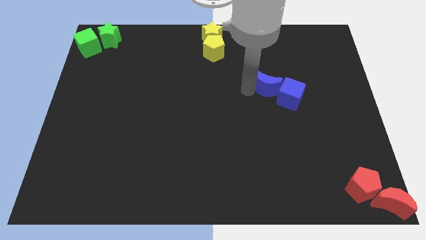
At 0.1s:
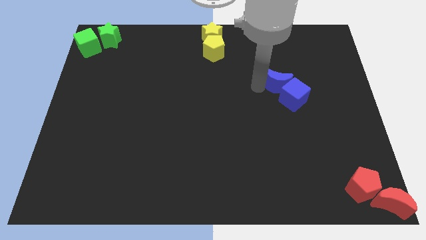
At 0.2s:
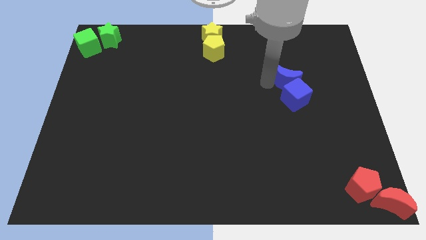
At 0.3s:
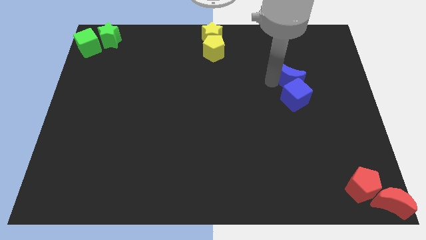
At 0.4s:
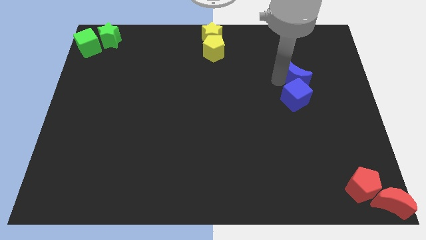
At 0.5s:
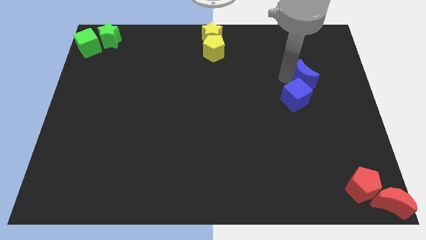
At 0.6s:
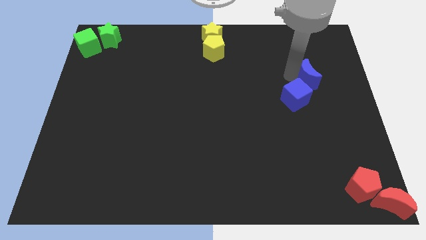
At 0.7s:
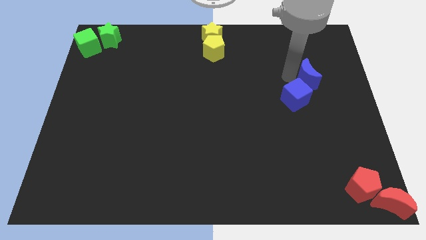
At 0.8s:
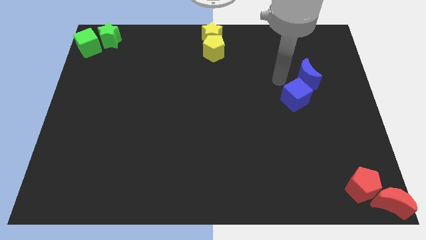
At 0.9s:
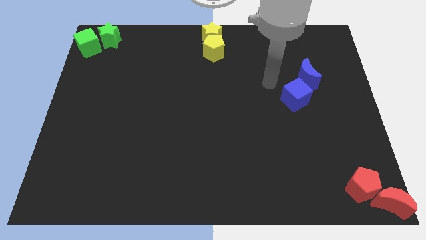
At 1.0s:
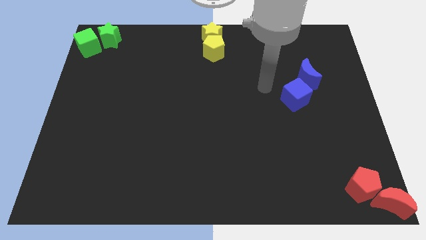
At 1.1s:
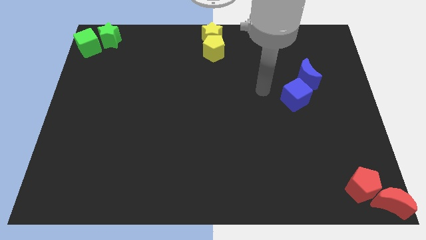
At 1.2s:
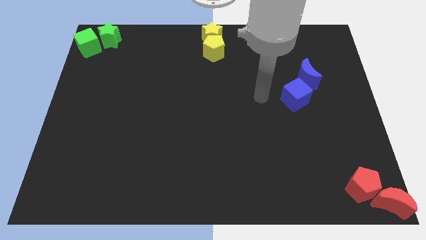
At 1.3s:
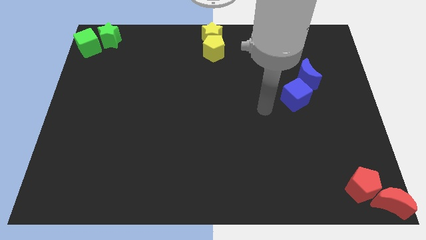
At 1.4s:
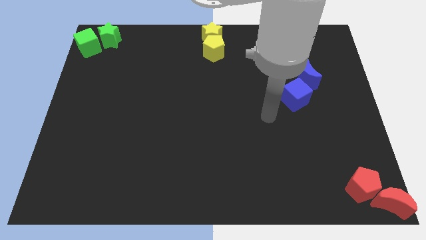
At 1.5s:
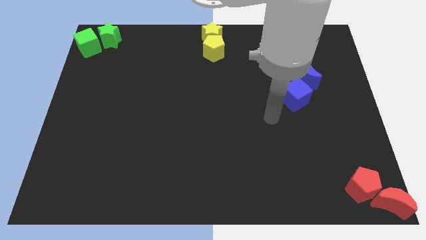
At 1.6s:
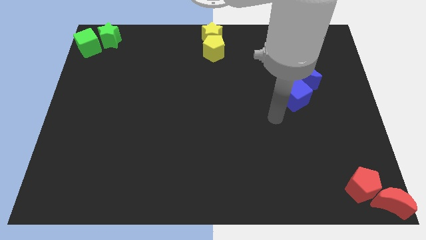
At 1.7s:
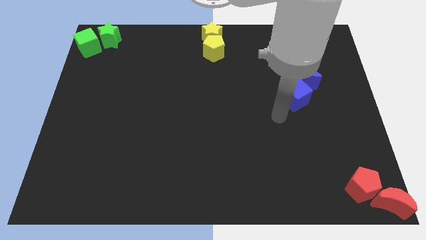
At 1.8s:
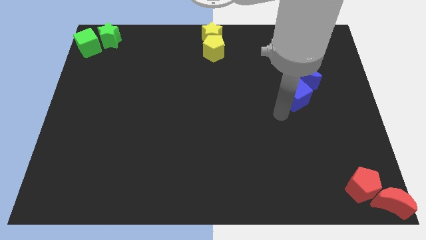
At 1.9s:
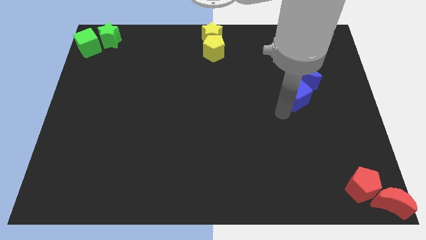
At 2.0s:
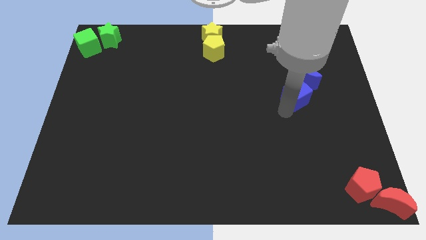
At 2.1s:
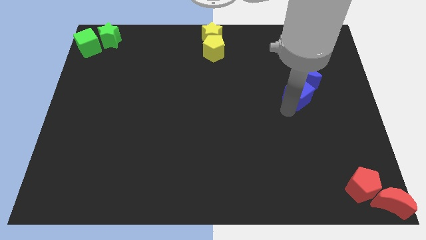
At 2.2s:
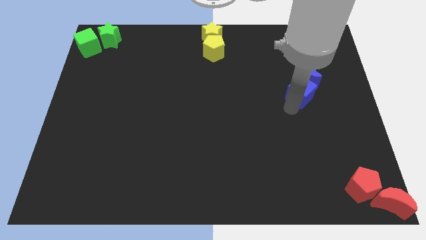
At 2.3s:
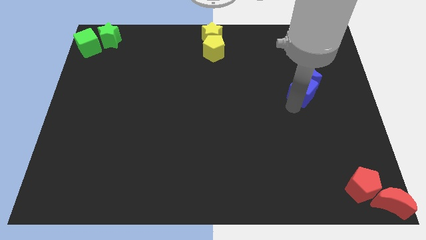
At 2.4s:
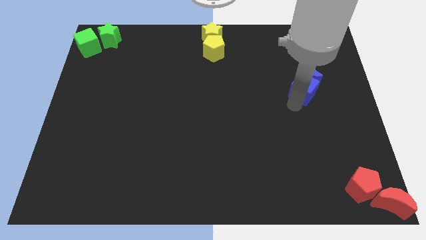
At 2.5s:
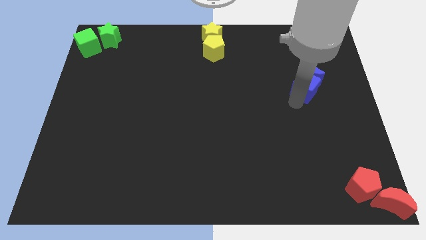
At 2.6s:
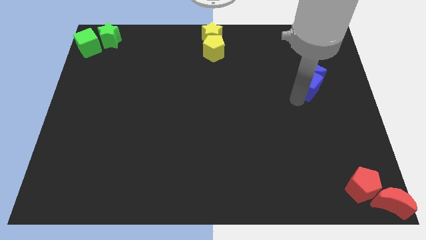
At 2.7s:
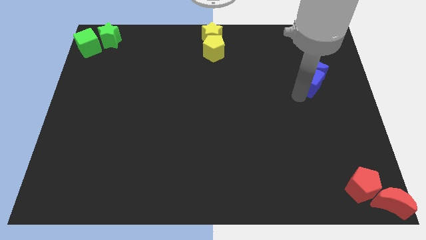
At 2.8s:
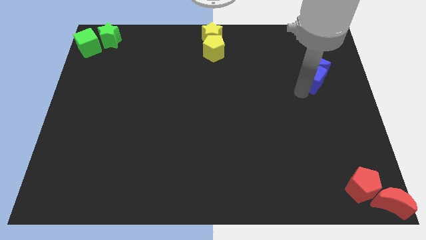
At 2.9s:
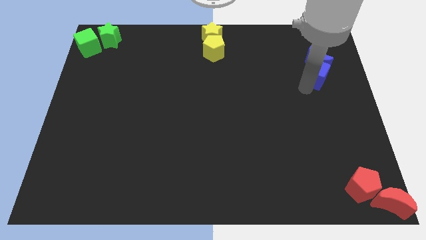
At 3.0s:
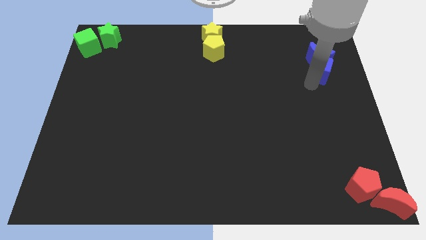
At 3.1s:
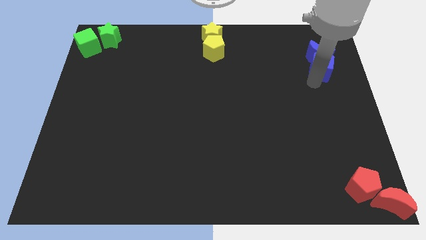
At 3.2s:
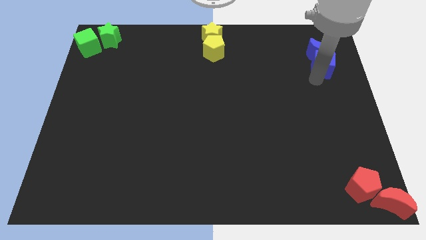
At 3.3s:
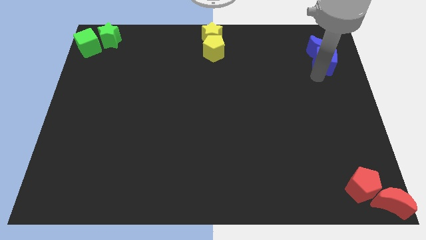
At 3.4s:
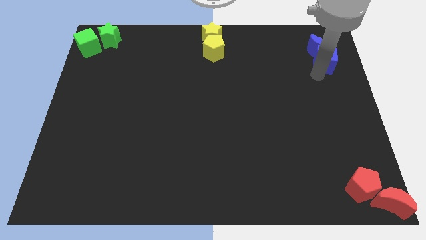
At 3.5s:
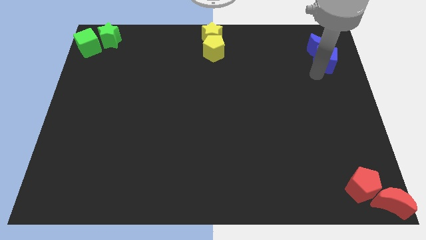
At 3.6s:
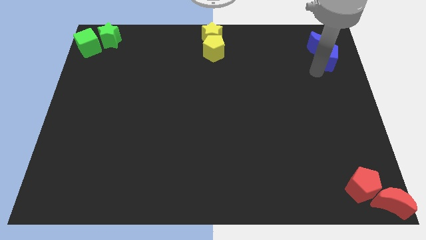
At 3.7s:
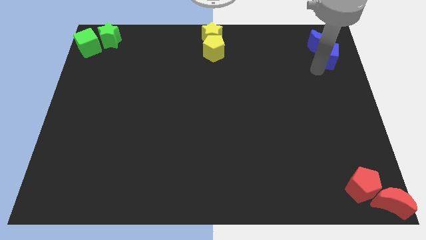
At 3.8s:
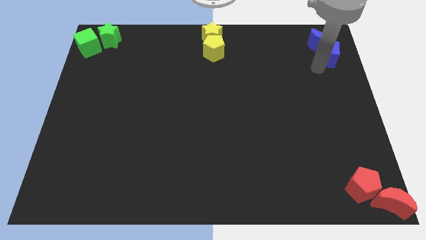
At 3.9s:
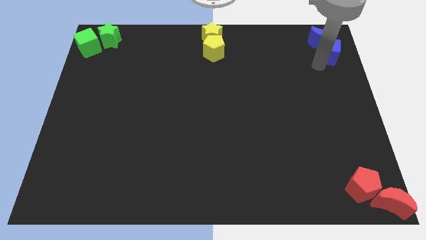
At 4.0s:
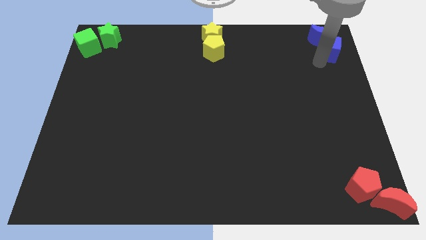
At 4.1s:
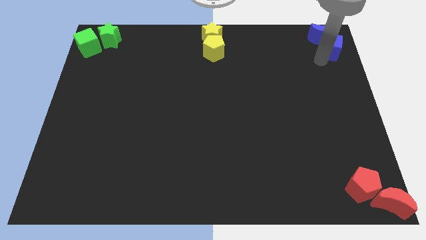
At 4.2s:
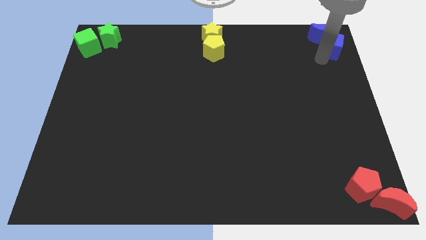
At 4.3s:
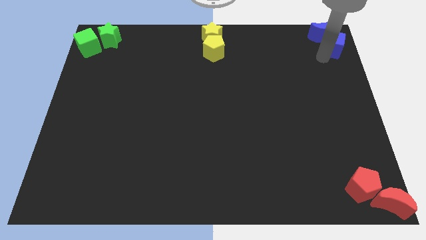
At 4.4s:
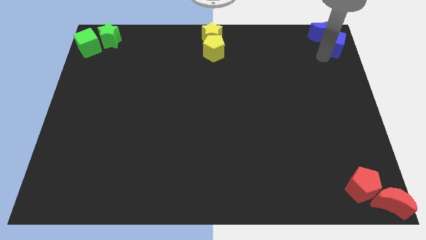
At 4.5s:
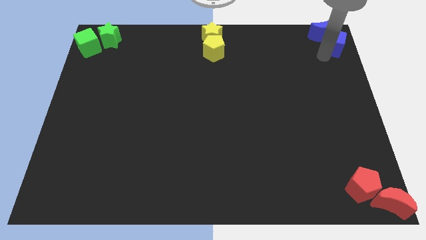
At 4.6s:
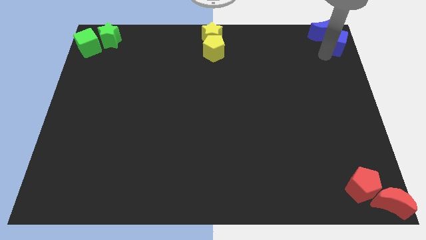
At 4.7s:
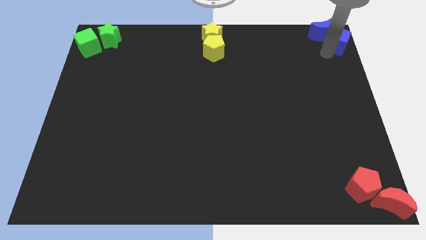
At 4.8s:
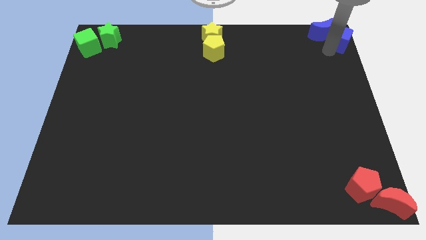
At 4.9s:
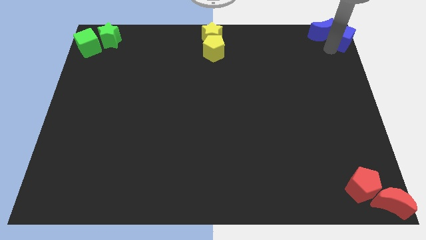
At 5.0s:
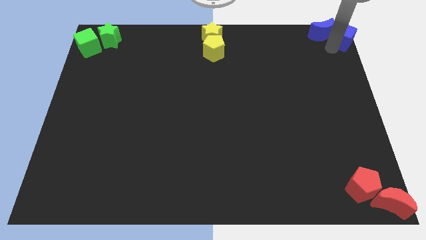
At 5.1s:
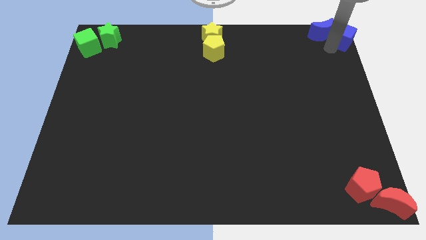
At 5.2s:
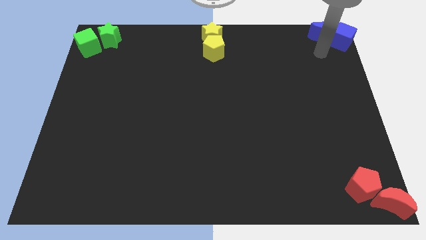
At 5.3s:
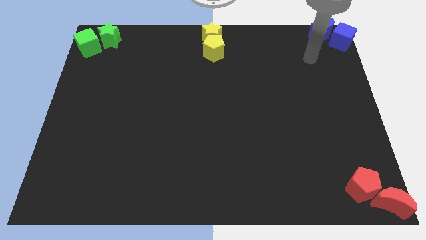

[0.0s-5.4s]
push the blue blocks towards the top right corner of the table

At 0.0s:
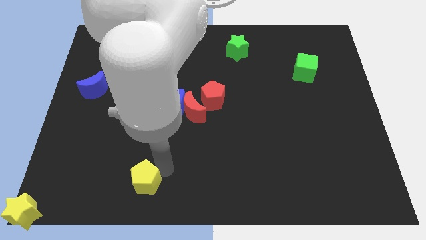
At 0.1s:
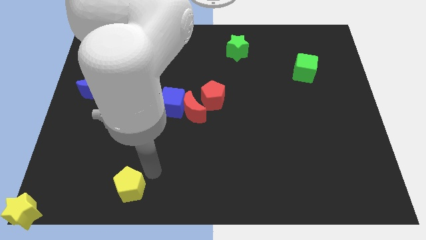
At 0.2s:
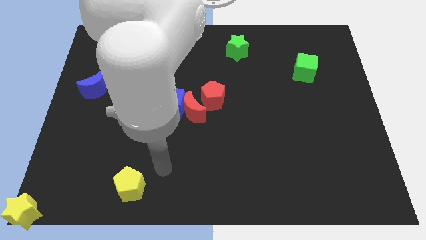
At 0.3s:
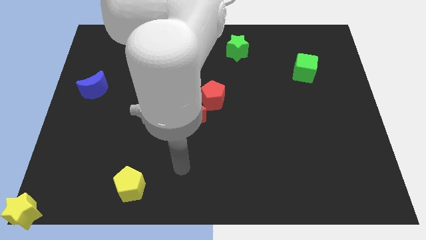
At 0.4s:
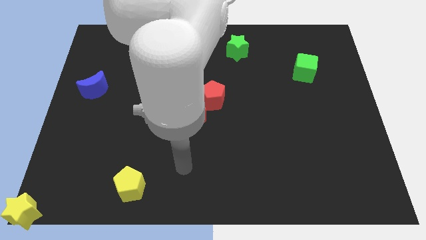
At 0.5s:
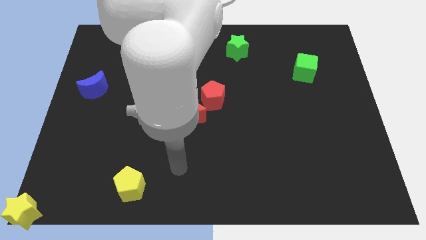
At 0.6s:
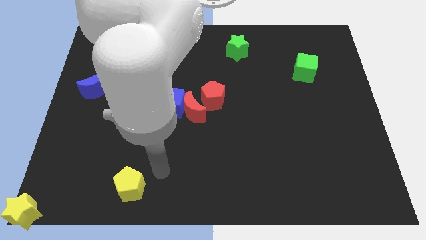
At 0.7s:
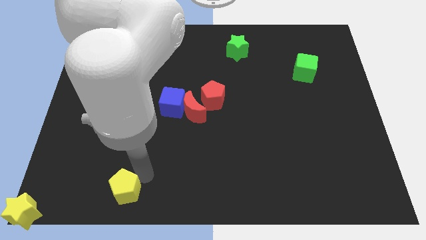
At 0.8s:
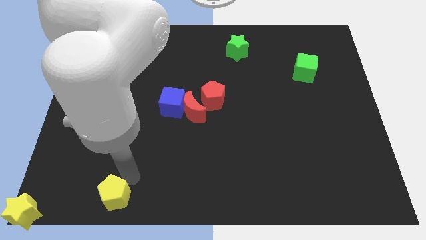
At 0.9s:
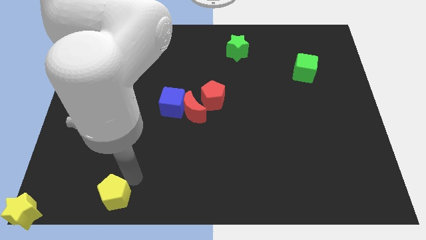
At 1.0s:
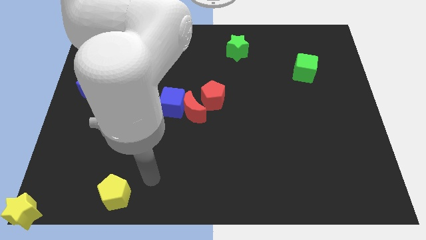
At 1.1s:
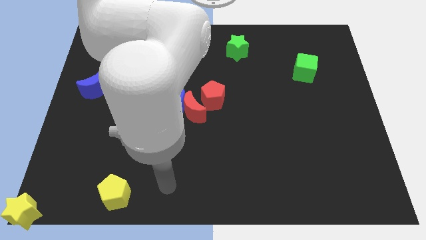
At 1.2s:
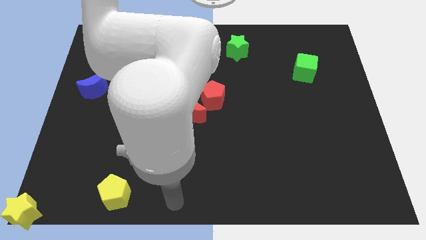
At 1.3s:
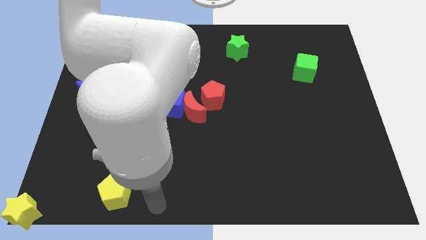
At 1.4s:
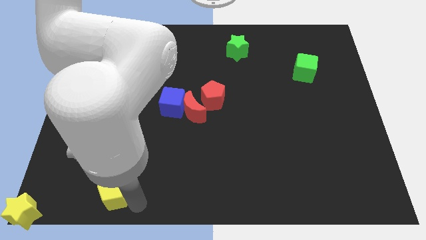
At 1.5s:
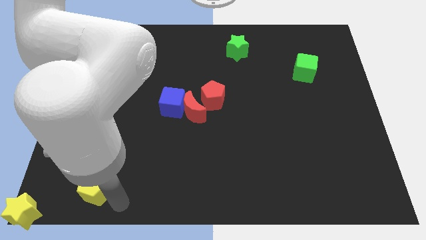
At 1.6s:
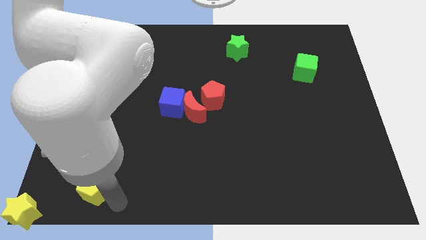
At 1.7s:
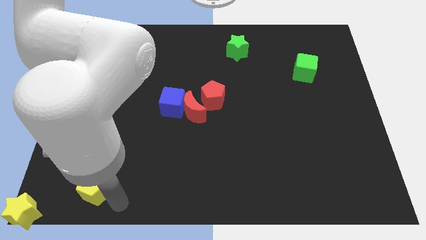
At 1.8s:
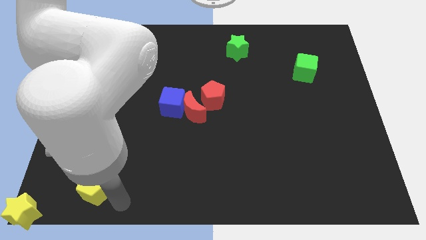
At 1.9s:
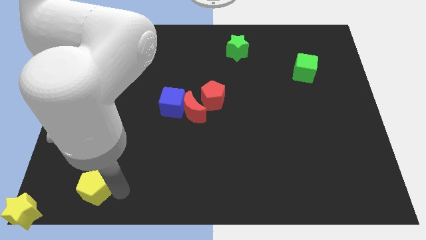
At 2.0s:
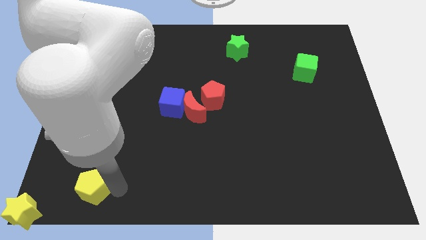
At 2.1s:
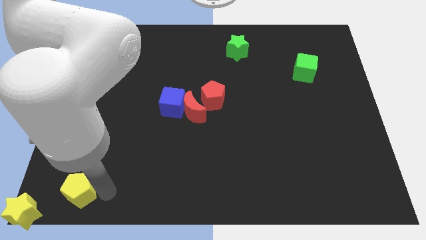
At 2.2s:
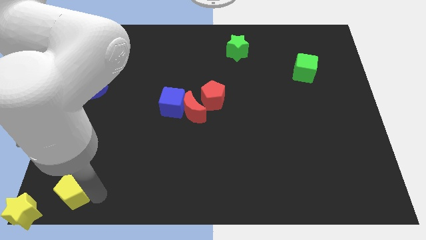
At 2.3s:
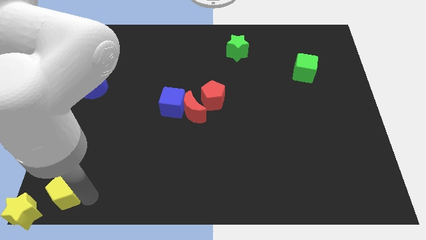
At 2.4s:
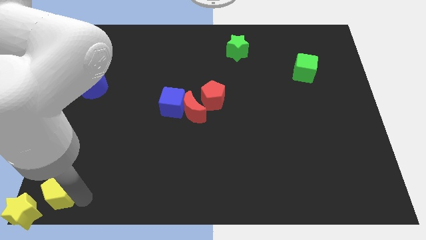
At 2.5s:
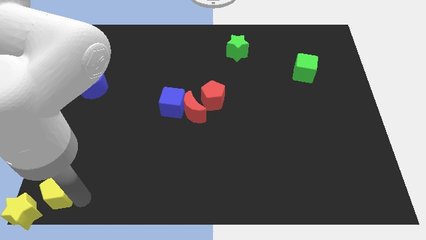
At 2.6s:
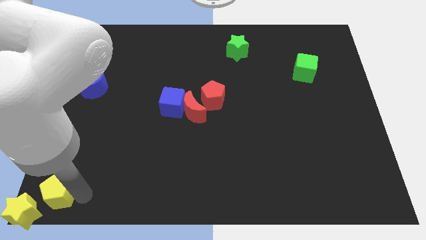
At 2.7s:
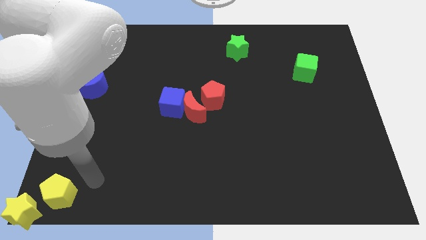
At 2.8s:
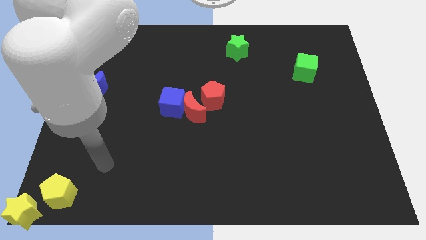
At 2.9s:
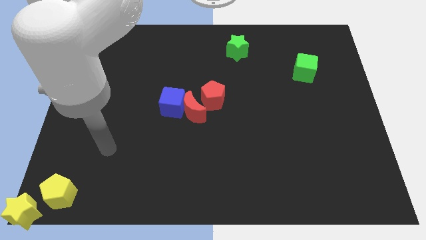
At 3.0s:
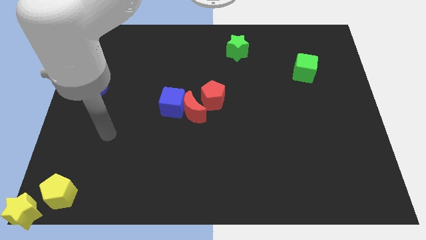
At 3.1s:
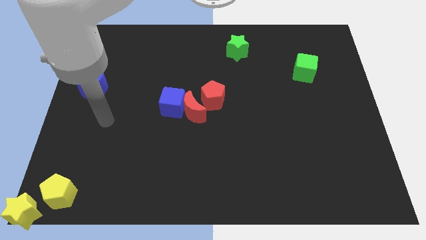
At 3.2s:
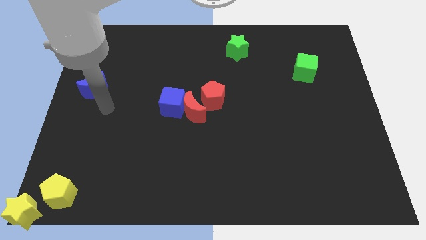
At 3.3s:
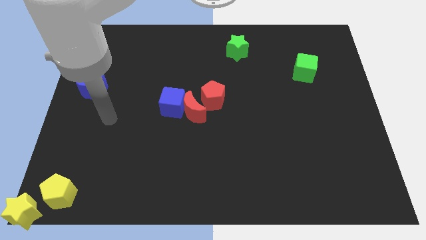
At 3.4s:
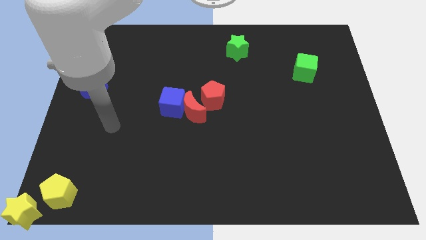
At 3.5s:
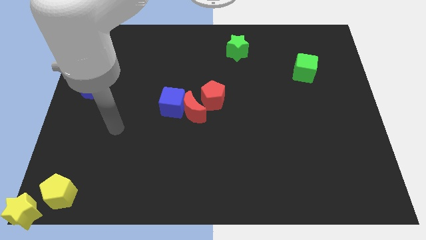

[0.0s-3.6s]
place the yellow pentagon to the bottom left corner

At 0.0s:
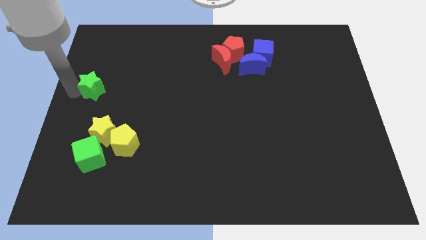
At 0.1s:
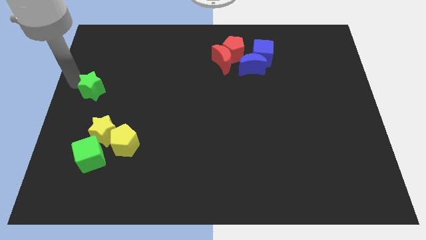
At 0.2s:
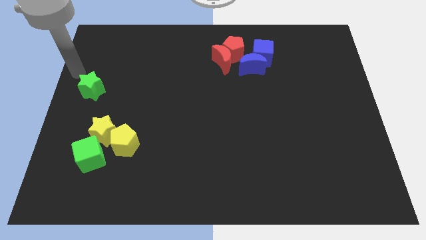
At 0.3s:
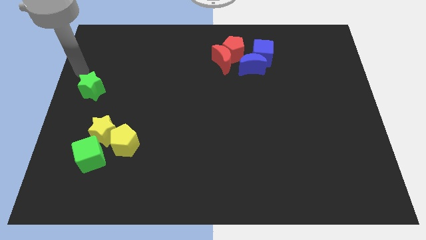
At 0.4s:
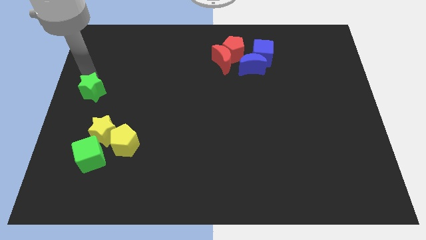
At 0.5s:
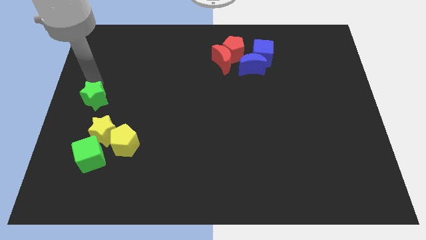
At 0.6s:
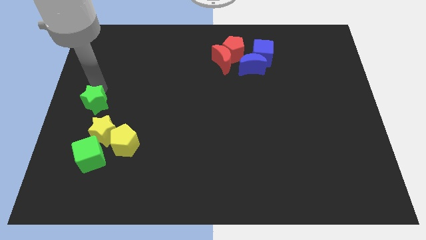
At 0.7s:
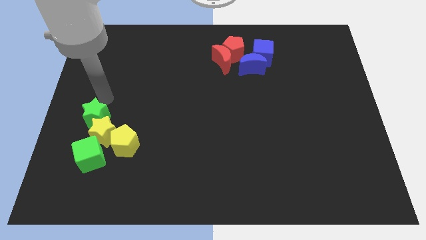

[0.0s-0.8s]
move the green star to the top left of the yellow star
